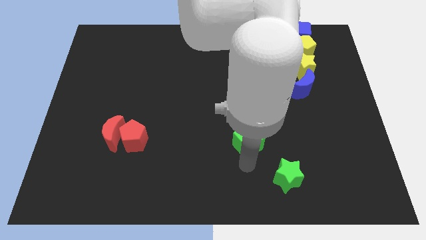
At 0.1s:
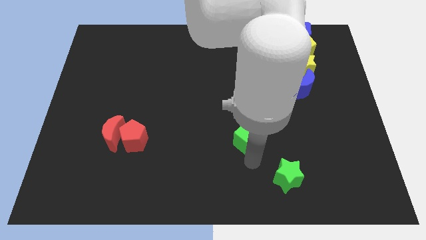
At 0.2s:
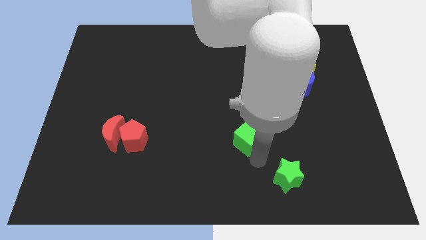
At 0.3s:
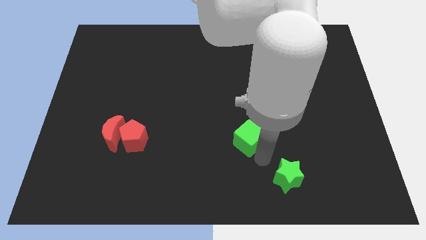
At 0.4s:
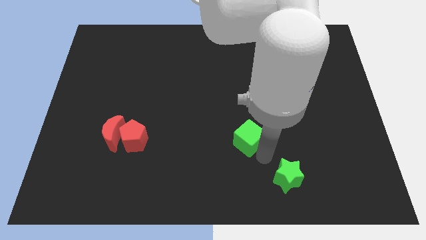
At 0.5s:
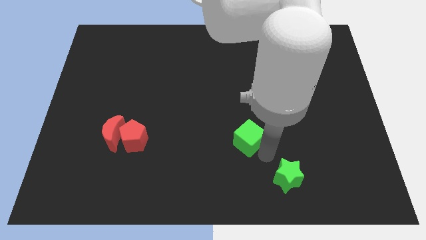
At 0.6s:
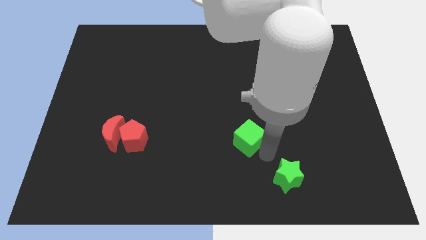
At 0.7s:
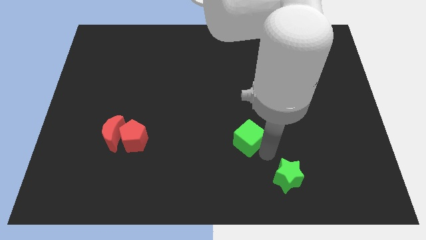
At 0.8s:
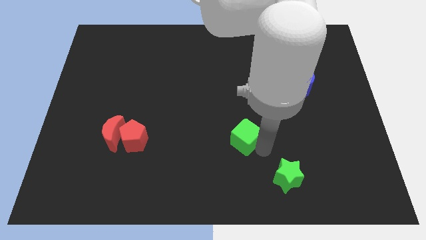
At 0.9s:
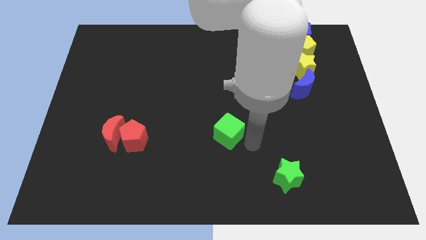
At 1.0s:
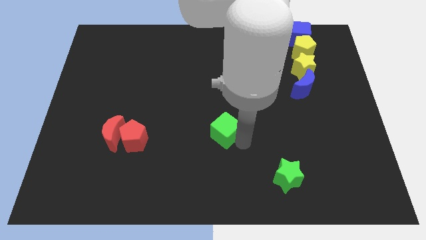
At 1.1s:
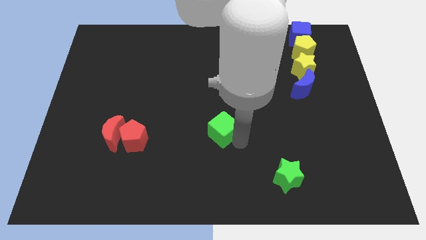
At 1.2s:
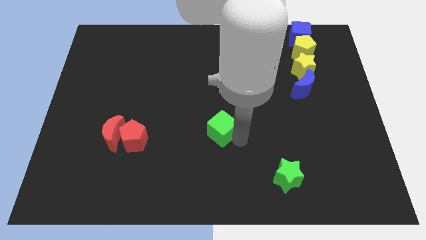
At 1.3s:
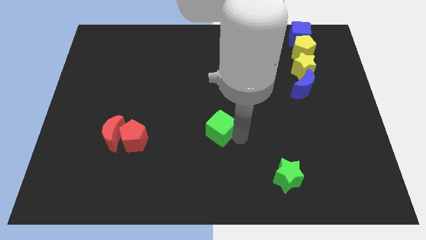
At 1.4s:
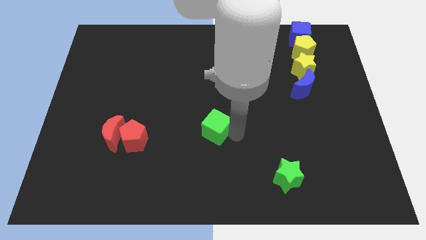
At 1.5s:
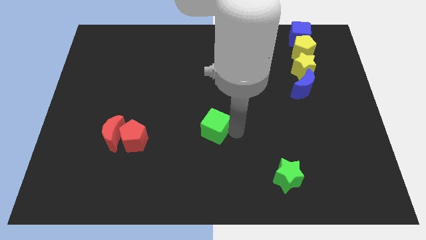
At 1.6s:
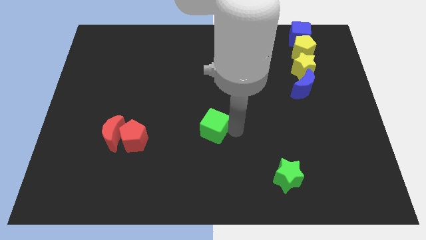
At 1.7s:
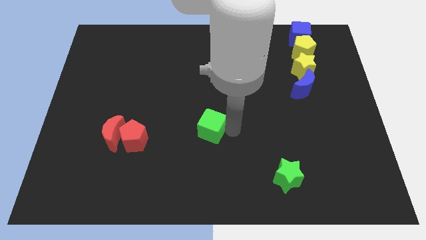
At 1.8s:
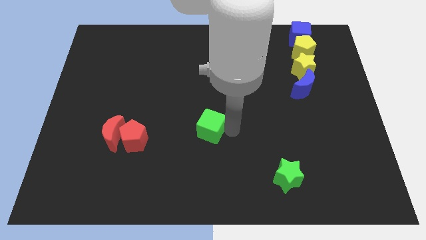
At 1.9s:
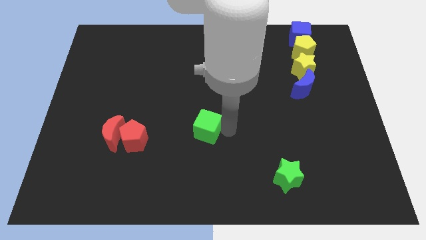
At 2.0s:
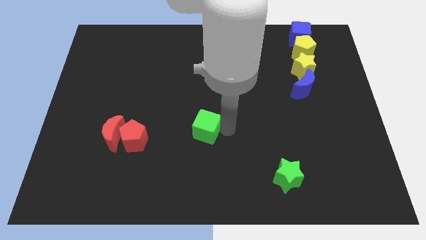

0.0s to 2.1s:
push the green cube to the center of the board

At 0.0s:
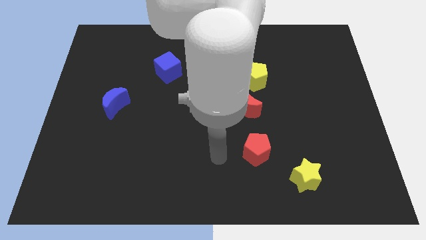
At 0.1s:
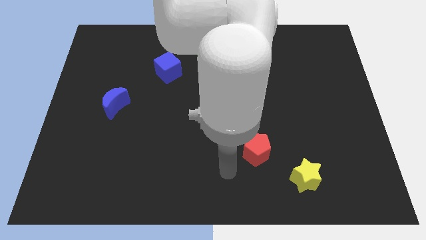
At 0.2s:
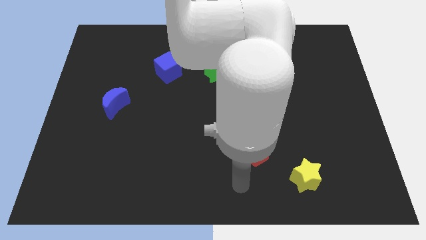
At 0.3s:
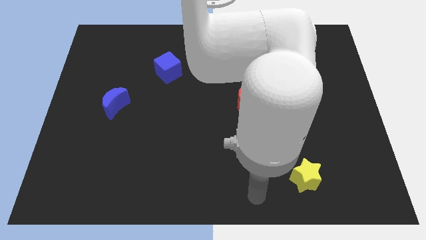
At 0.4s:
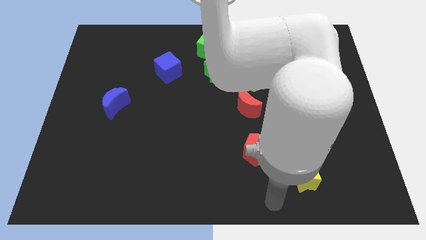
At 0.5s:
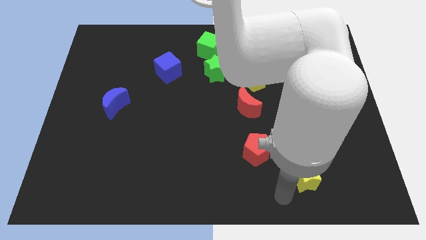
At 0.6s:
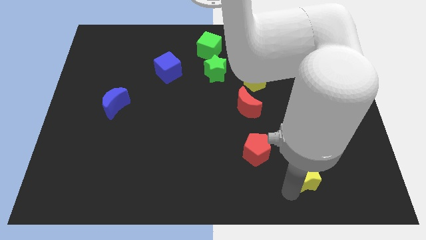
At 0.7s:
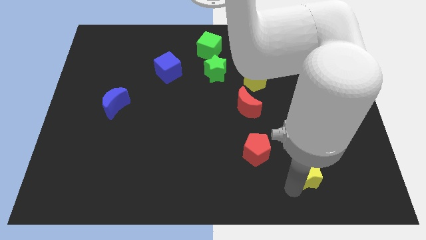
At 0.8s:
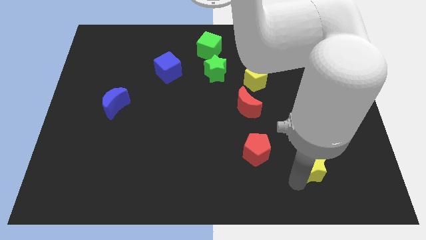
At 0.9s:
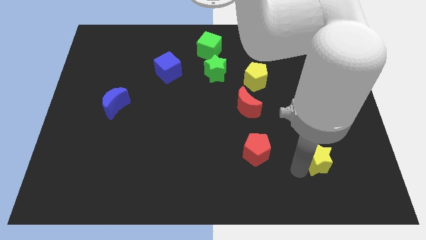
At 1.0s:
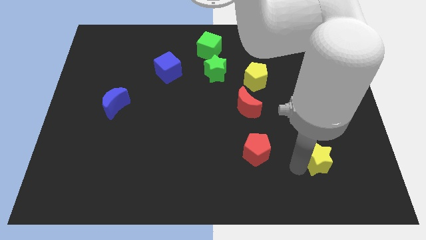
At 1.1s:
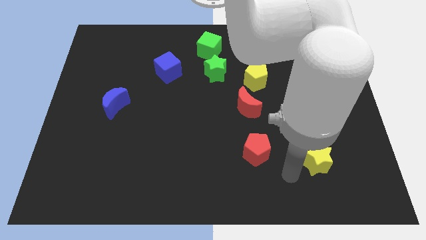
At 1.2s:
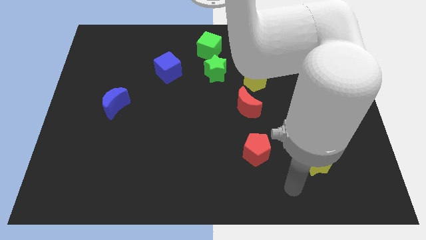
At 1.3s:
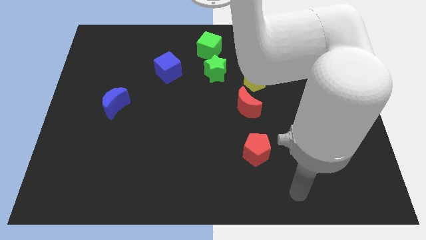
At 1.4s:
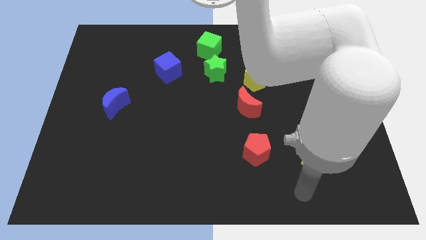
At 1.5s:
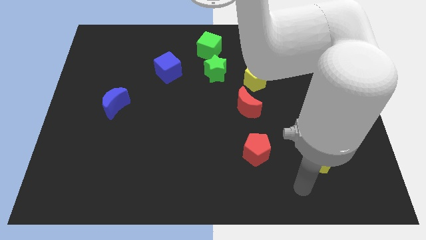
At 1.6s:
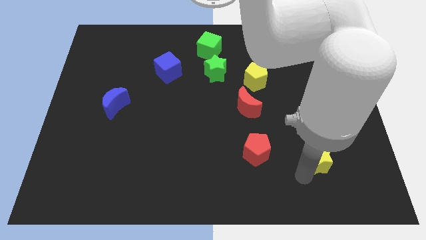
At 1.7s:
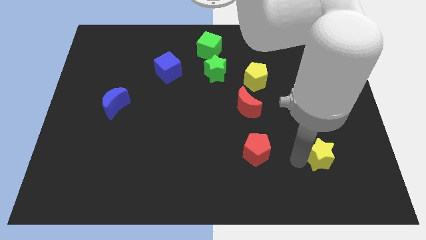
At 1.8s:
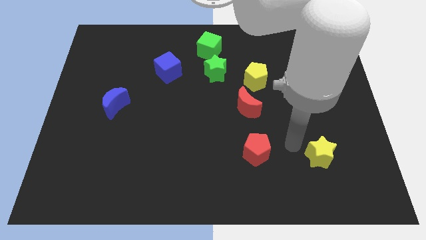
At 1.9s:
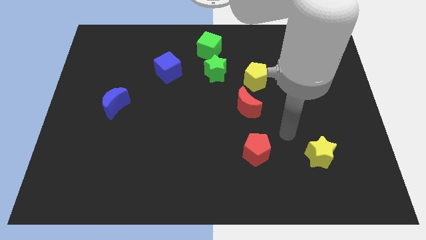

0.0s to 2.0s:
slightly push the yellow star to the right of red pentagon

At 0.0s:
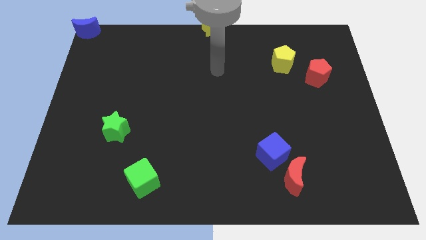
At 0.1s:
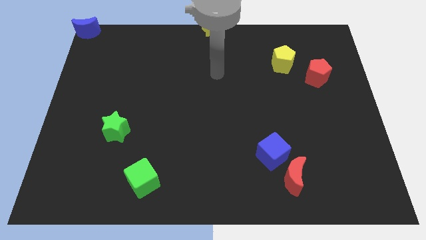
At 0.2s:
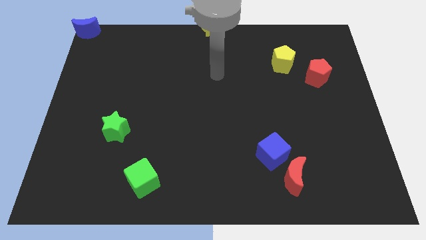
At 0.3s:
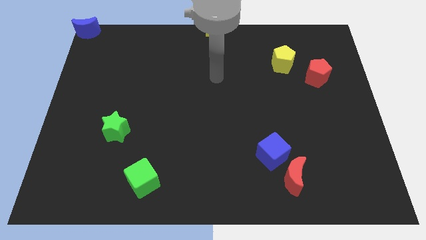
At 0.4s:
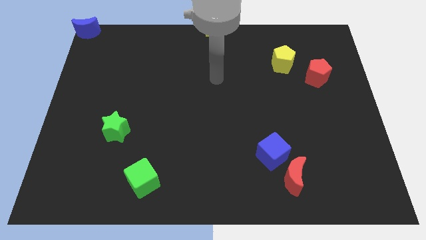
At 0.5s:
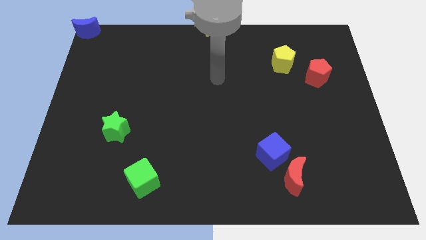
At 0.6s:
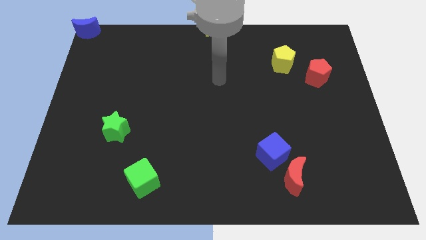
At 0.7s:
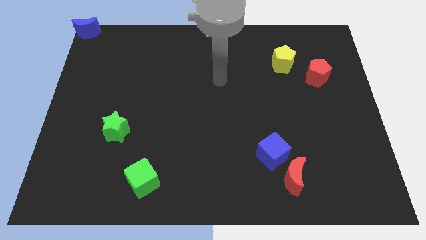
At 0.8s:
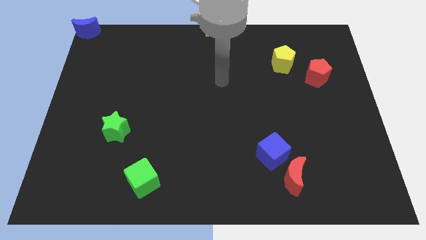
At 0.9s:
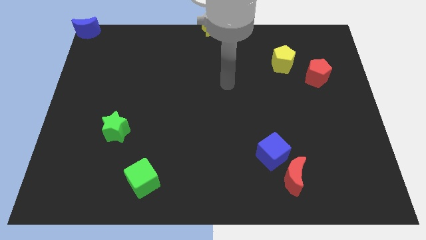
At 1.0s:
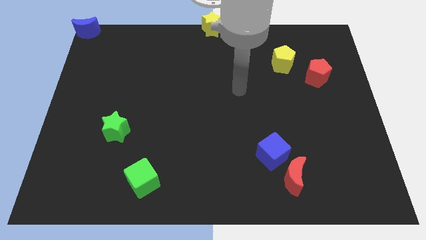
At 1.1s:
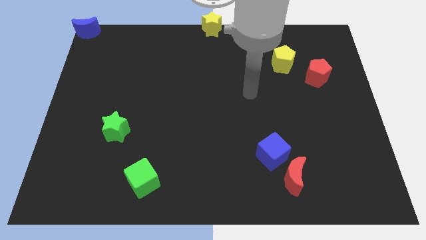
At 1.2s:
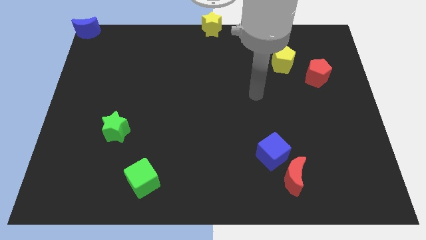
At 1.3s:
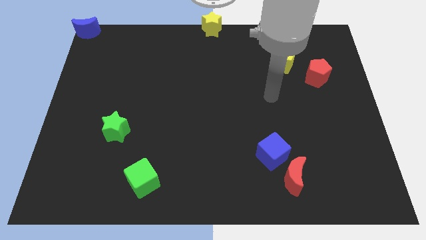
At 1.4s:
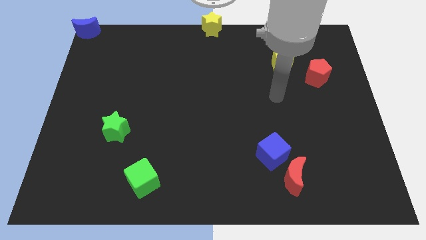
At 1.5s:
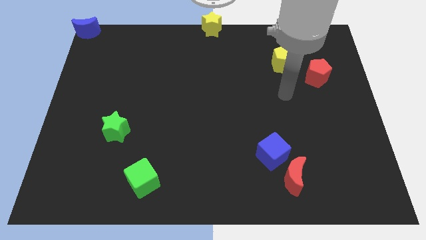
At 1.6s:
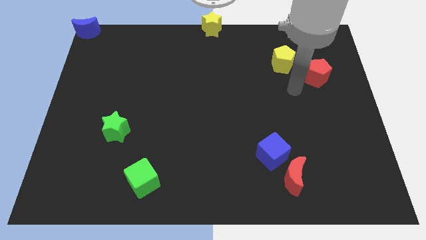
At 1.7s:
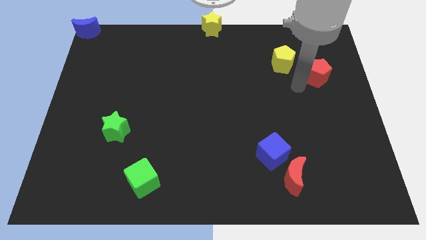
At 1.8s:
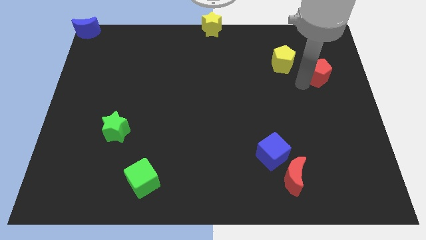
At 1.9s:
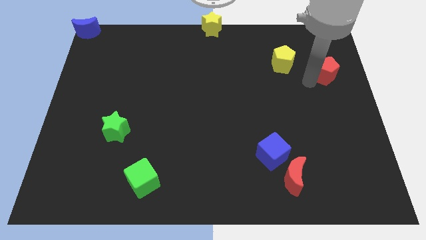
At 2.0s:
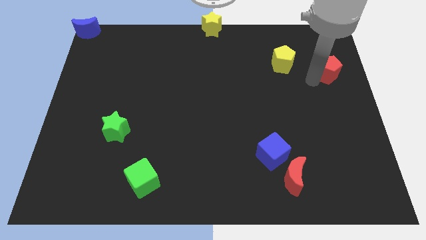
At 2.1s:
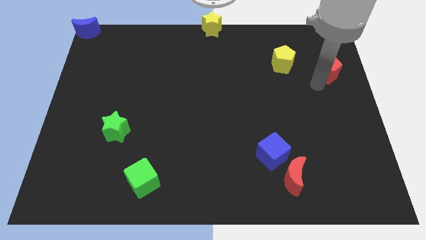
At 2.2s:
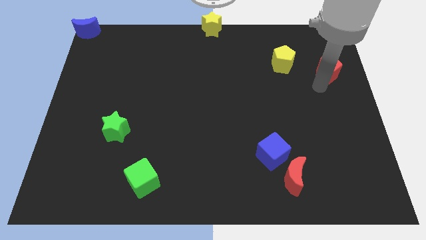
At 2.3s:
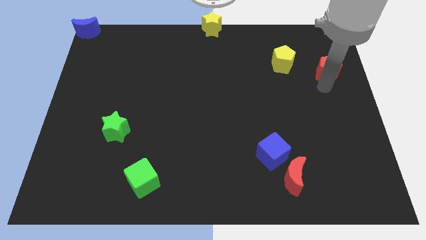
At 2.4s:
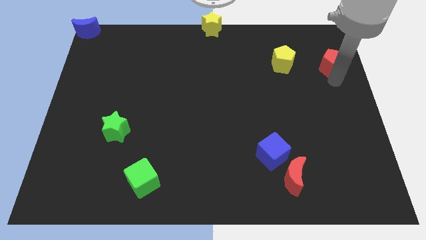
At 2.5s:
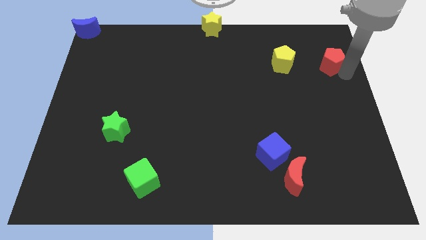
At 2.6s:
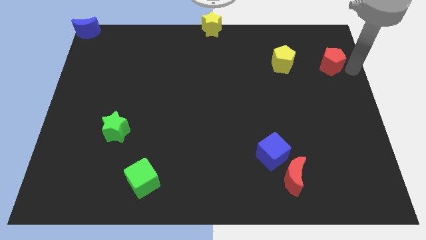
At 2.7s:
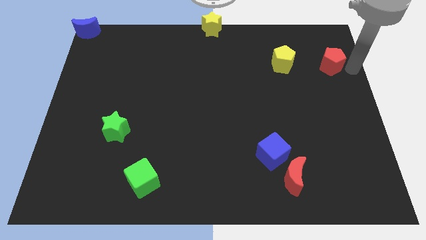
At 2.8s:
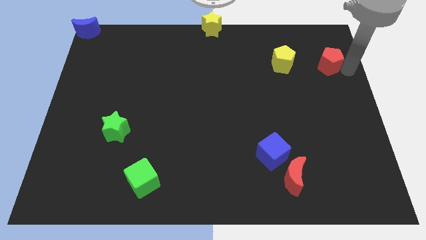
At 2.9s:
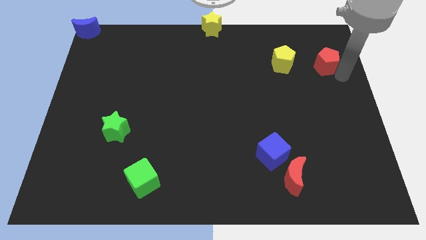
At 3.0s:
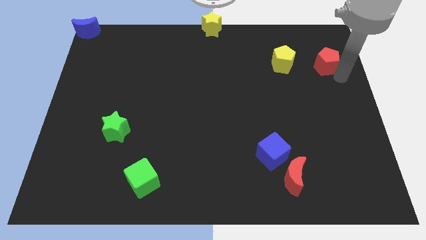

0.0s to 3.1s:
slide red pentagon to the right of yellow pentagon

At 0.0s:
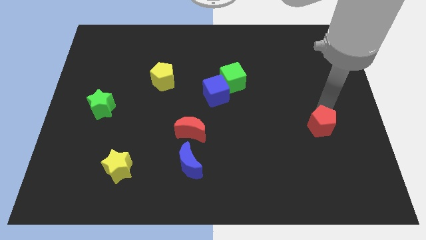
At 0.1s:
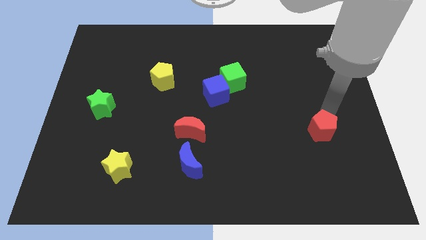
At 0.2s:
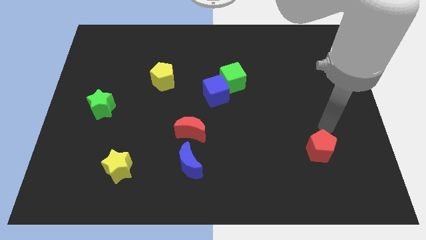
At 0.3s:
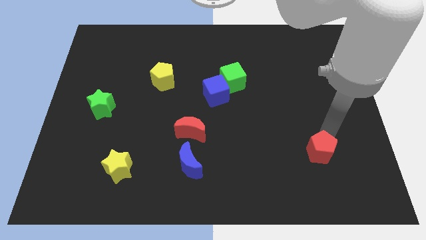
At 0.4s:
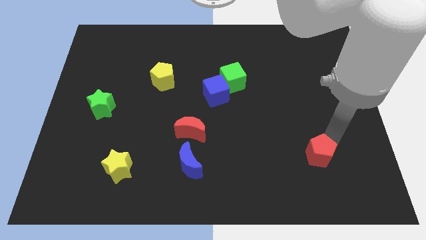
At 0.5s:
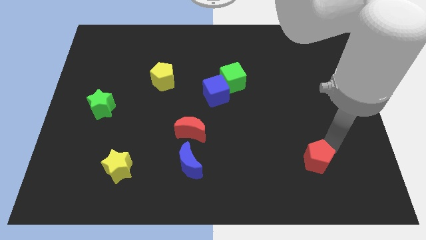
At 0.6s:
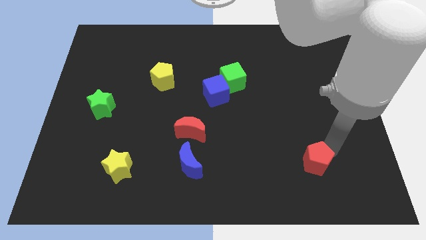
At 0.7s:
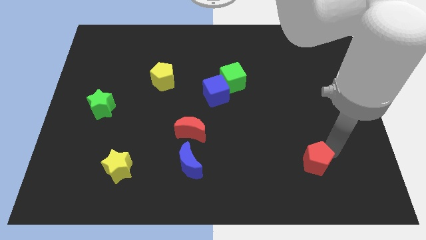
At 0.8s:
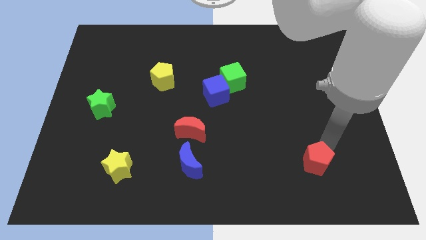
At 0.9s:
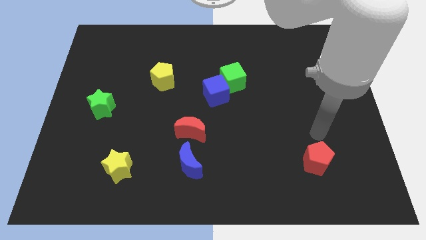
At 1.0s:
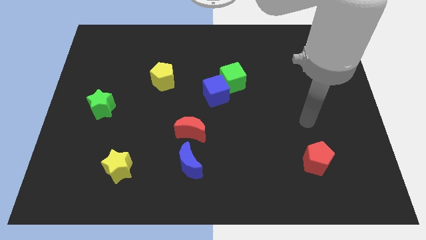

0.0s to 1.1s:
put the red pentagon horizontal right to the blue crescent

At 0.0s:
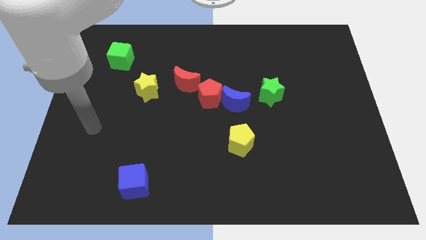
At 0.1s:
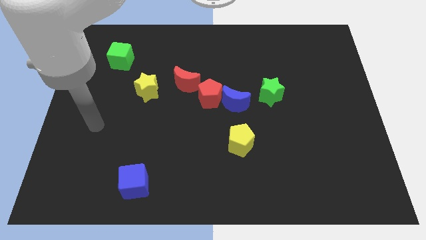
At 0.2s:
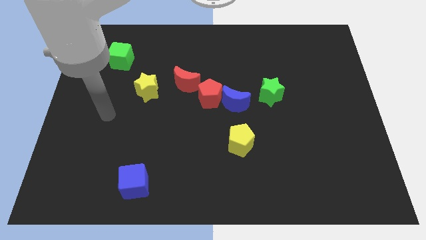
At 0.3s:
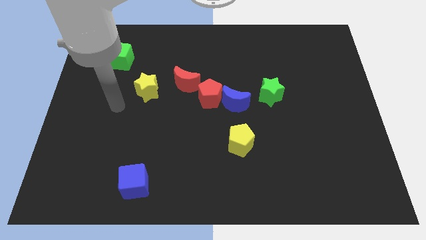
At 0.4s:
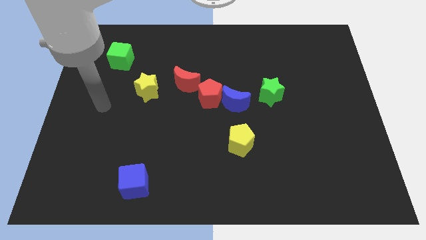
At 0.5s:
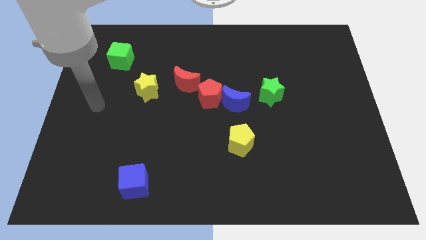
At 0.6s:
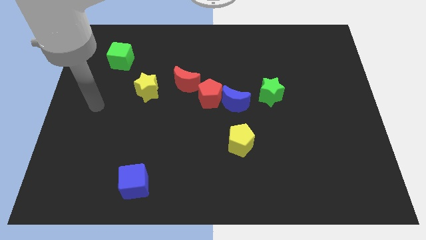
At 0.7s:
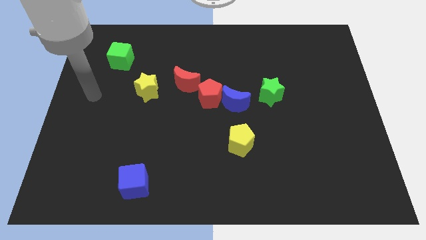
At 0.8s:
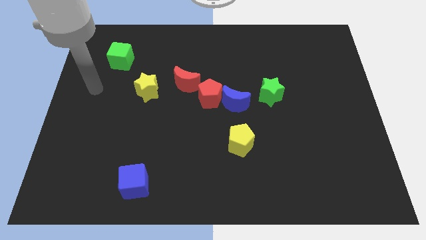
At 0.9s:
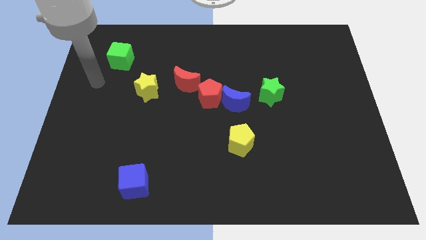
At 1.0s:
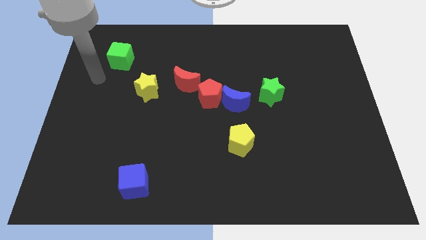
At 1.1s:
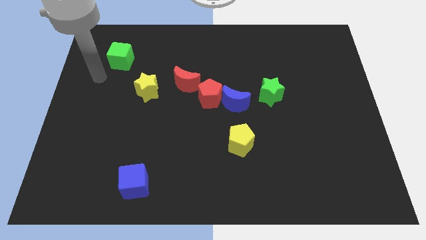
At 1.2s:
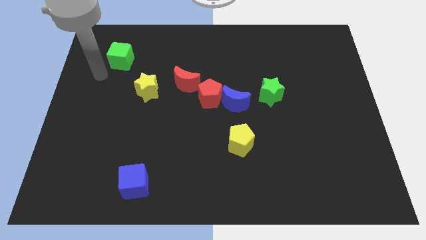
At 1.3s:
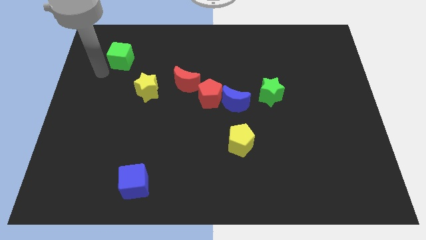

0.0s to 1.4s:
move your arm on the bottom left of the green cube
